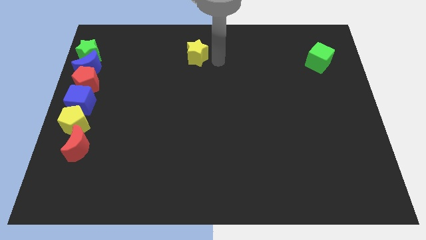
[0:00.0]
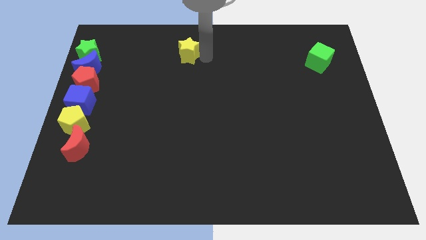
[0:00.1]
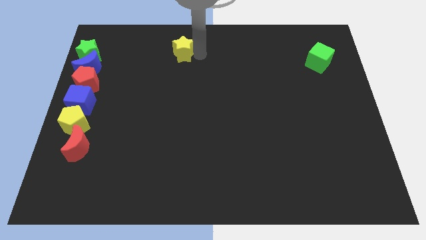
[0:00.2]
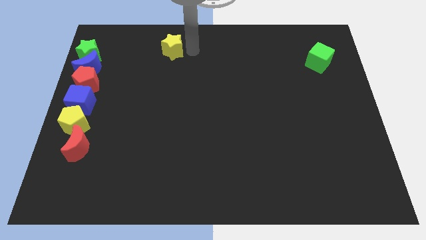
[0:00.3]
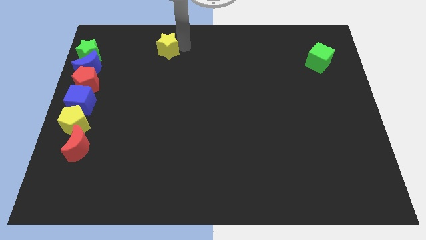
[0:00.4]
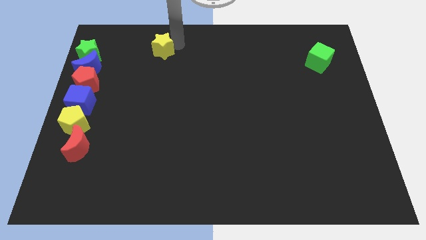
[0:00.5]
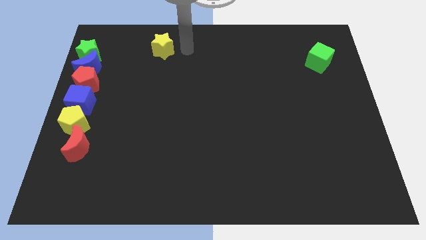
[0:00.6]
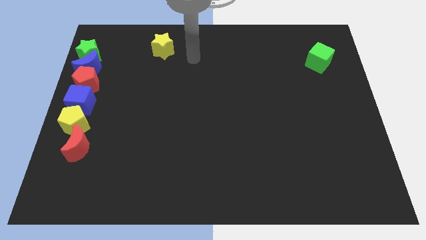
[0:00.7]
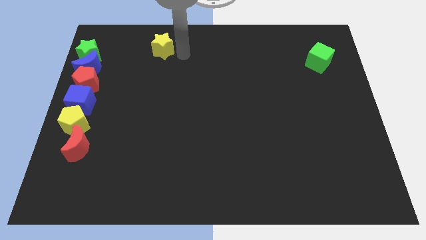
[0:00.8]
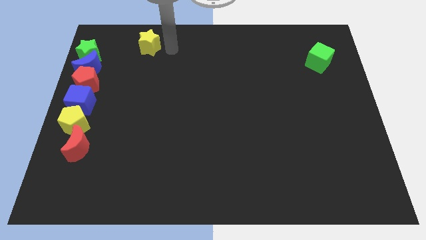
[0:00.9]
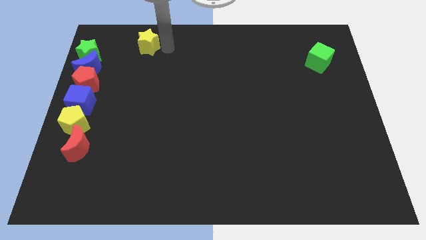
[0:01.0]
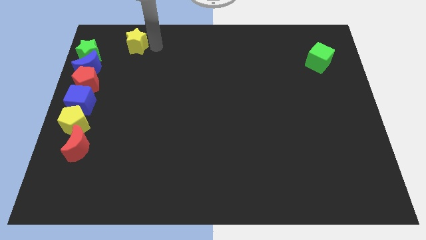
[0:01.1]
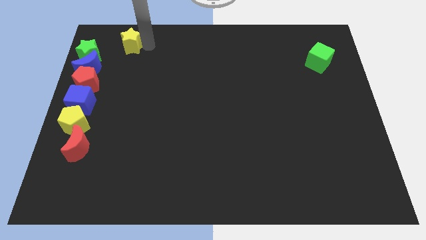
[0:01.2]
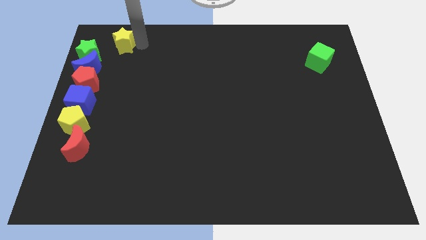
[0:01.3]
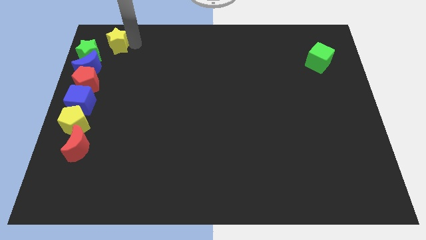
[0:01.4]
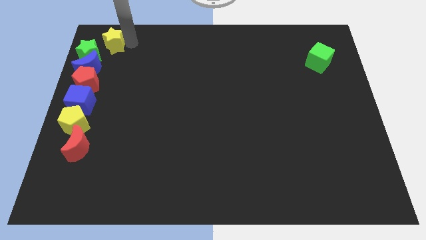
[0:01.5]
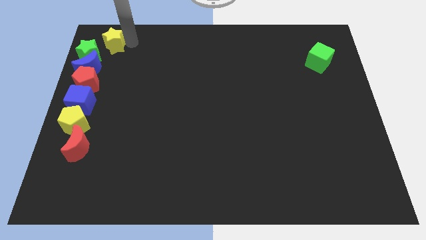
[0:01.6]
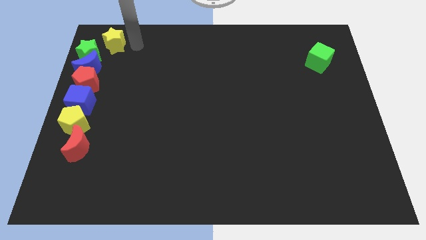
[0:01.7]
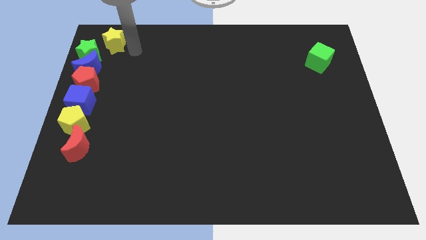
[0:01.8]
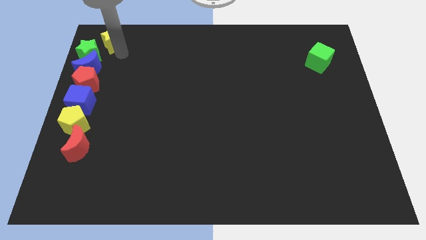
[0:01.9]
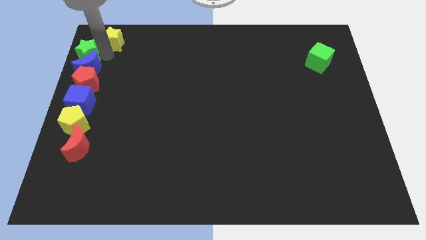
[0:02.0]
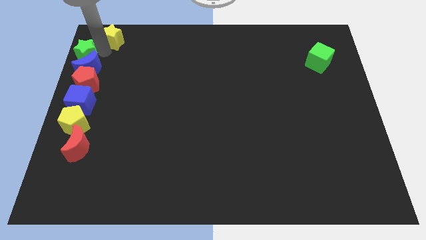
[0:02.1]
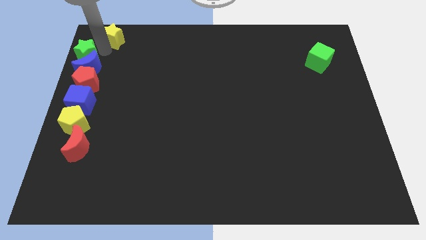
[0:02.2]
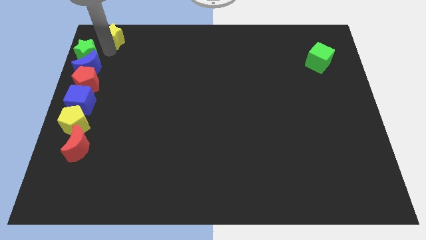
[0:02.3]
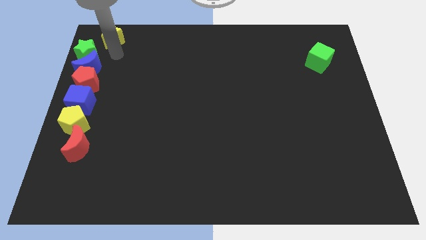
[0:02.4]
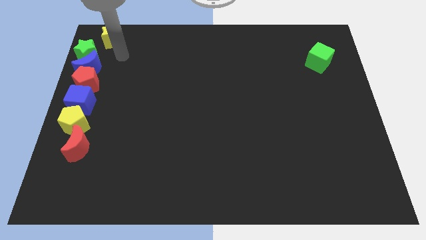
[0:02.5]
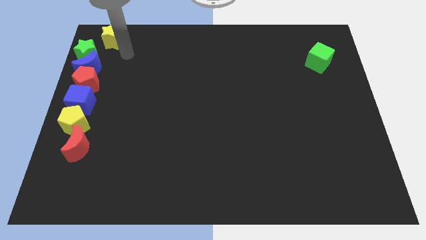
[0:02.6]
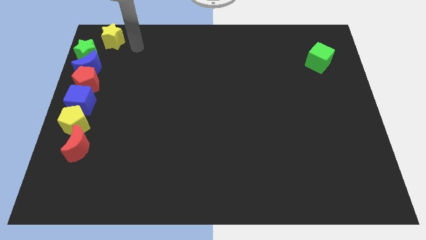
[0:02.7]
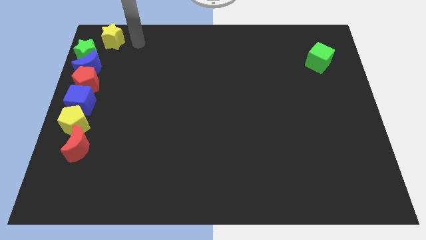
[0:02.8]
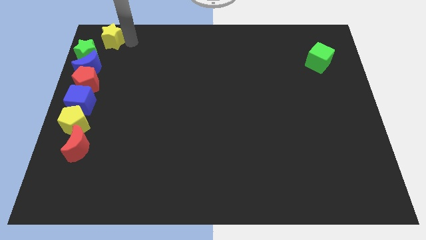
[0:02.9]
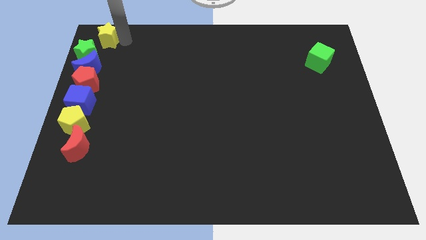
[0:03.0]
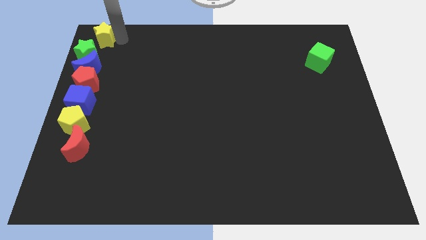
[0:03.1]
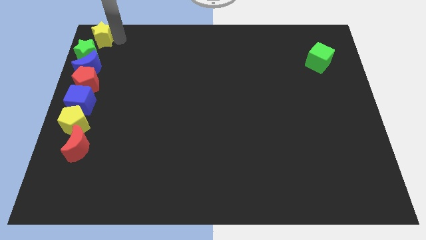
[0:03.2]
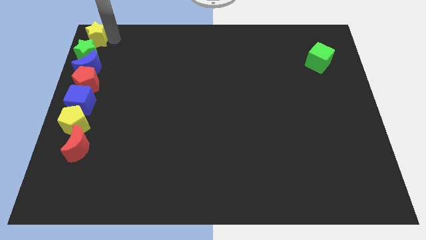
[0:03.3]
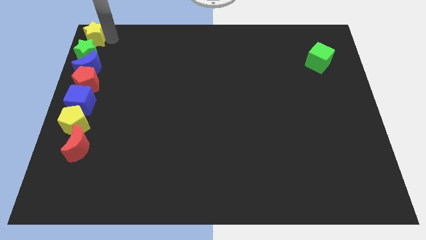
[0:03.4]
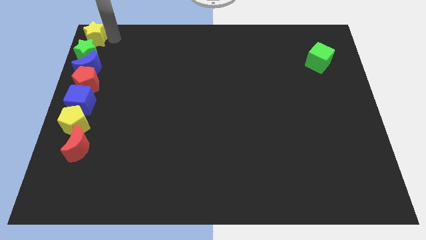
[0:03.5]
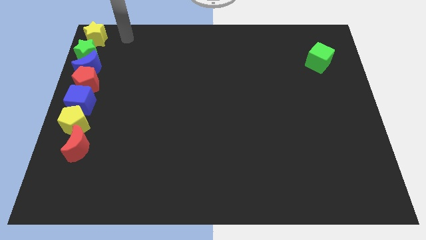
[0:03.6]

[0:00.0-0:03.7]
push the yellow star to the top of the green star vertically

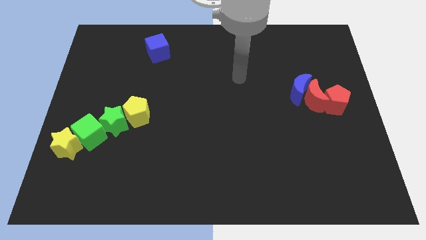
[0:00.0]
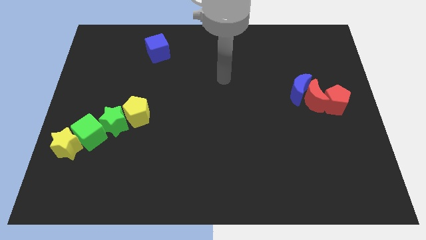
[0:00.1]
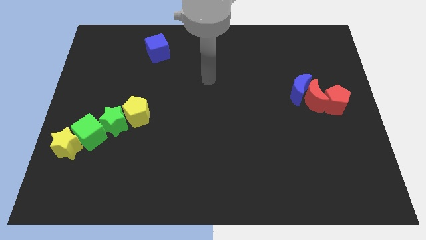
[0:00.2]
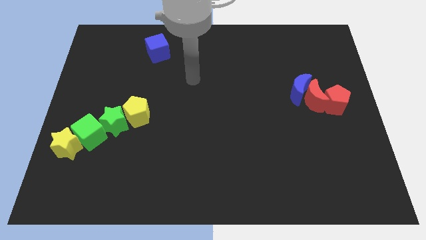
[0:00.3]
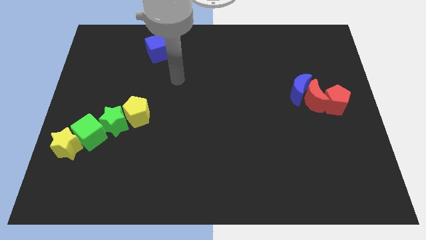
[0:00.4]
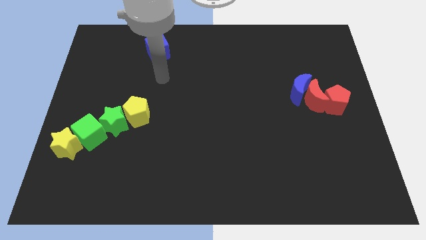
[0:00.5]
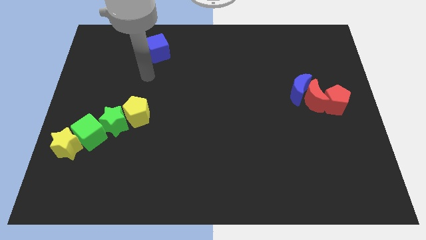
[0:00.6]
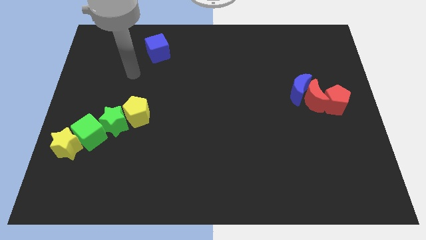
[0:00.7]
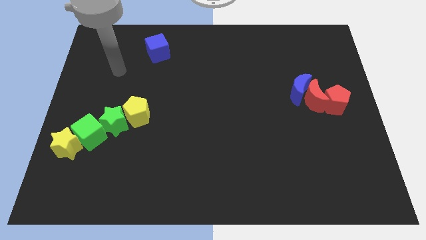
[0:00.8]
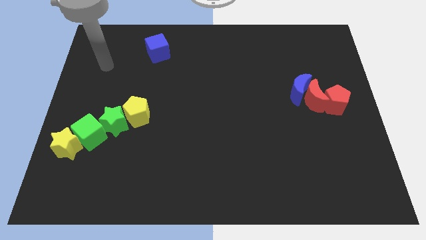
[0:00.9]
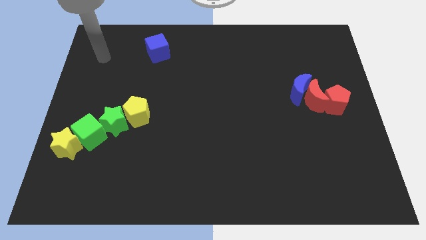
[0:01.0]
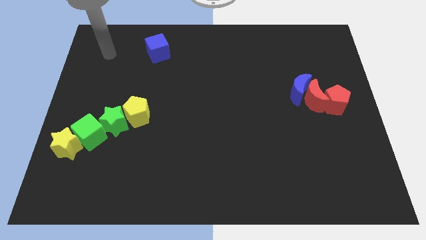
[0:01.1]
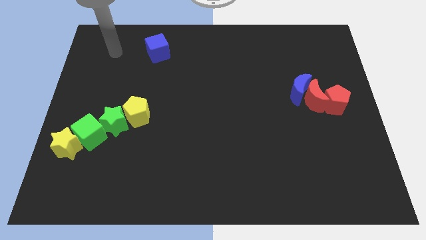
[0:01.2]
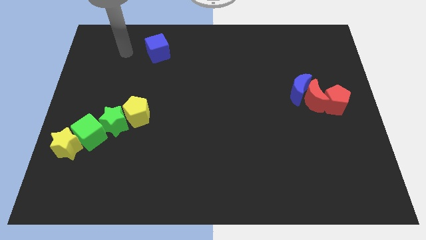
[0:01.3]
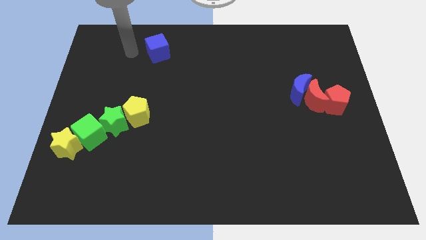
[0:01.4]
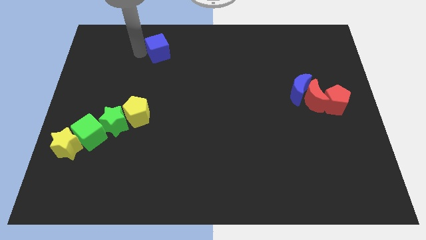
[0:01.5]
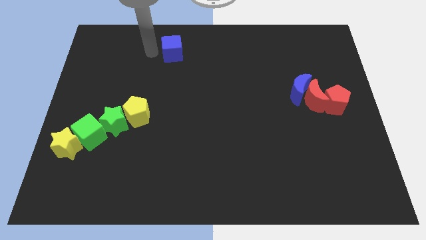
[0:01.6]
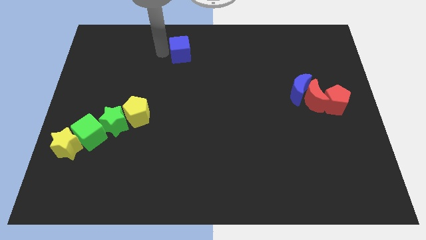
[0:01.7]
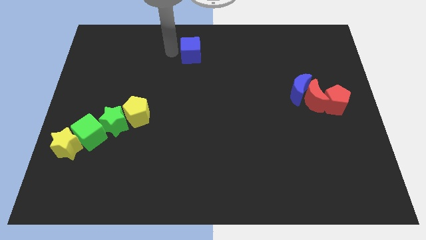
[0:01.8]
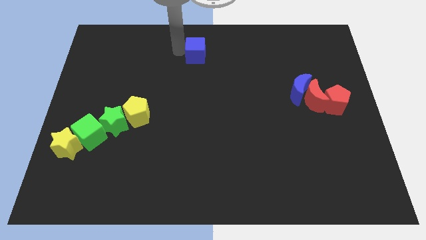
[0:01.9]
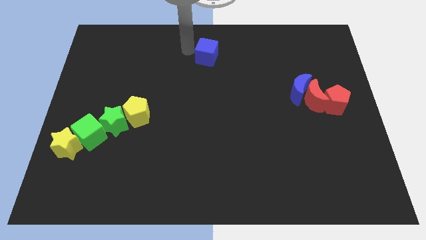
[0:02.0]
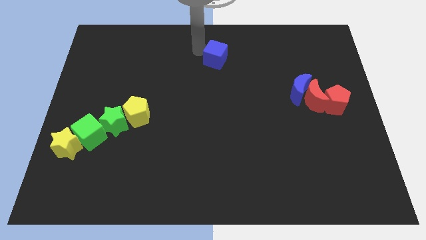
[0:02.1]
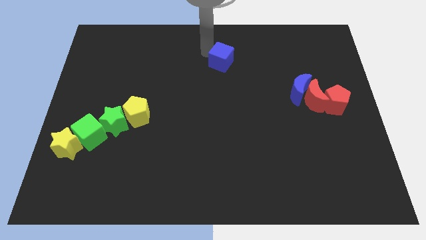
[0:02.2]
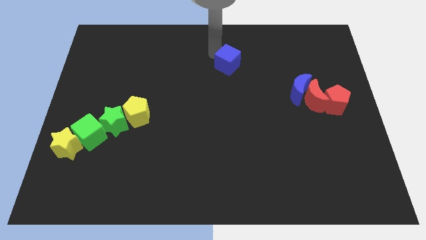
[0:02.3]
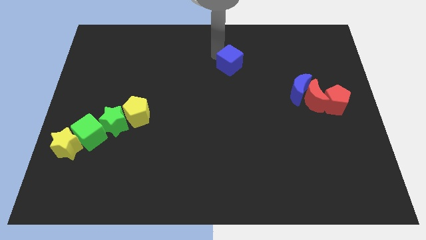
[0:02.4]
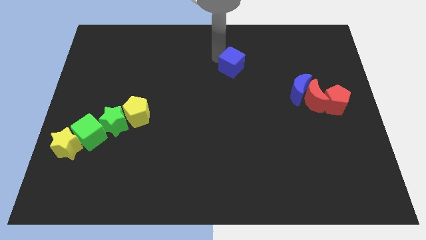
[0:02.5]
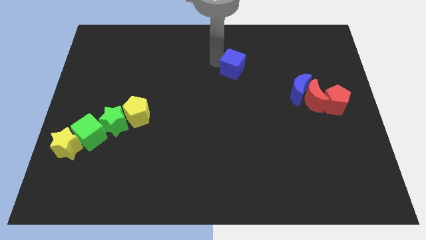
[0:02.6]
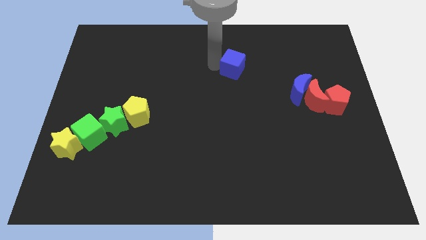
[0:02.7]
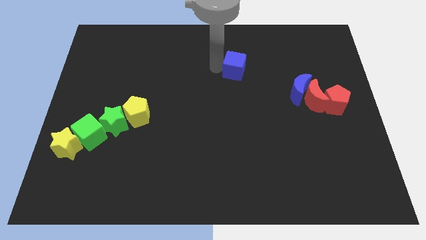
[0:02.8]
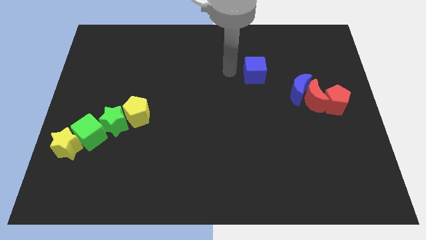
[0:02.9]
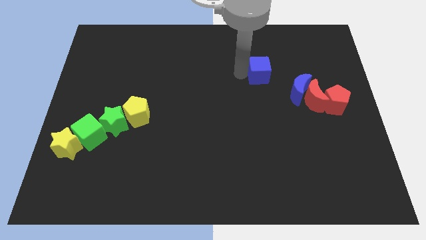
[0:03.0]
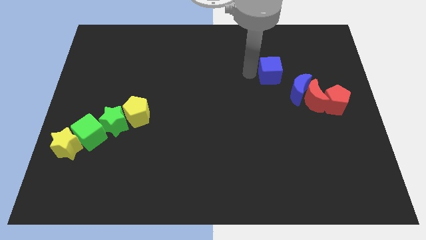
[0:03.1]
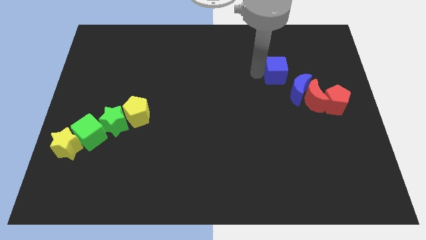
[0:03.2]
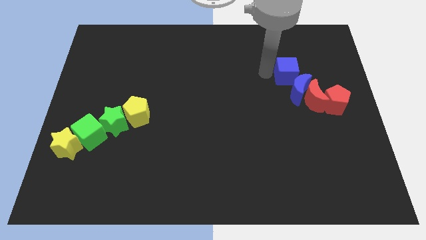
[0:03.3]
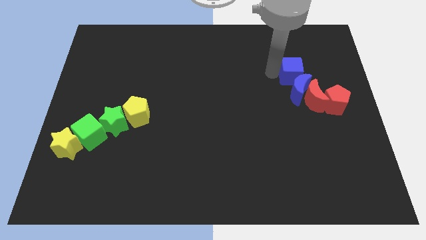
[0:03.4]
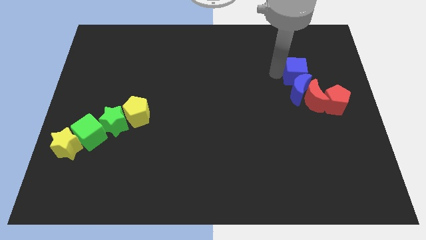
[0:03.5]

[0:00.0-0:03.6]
push the blue cube to the top of the blue crescent

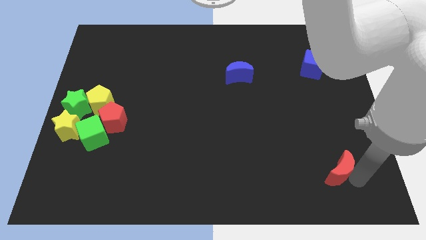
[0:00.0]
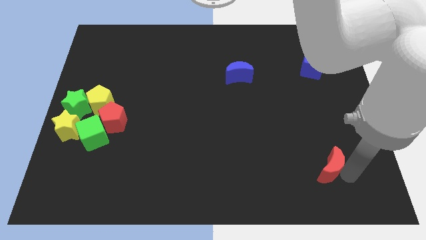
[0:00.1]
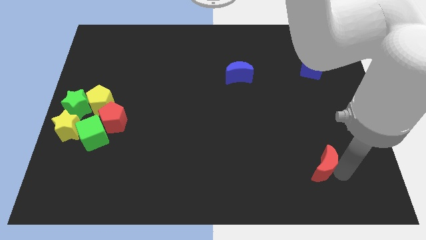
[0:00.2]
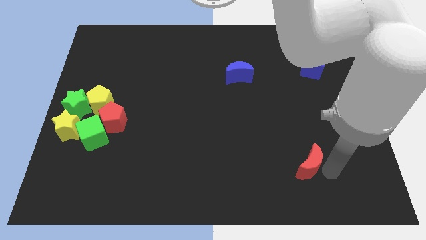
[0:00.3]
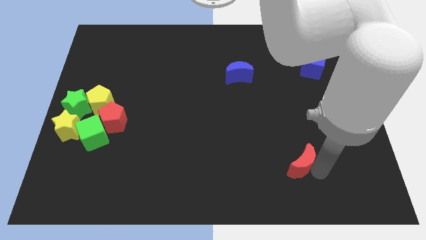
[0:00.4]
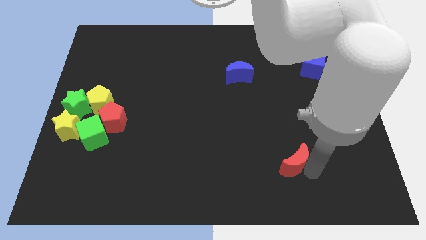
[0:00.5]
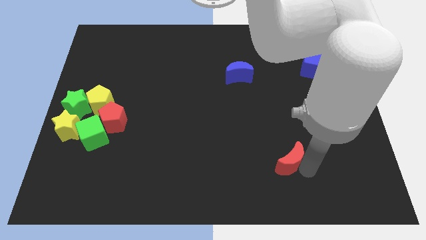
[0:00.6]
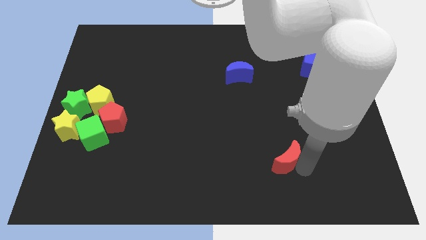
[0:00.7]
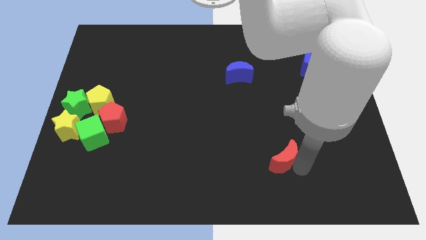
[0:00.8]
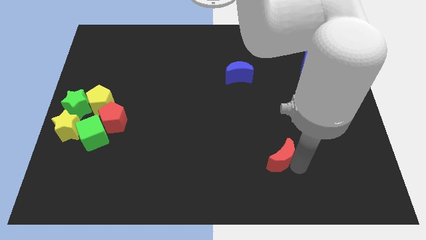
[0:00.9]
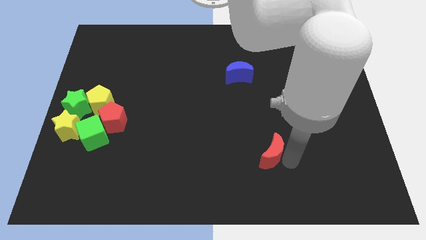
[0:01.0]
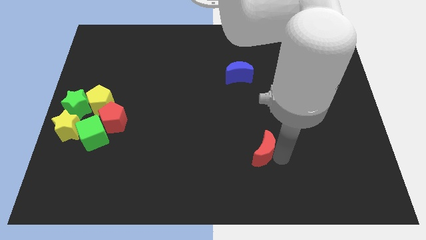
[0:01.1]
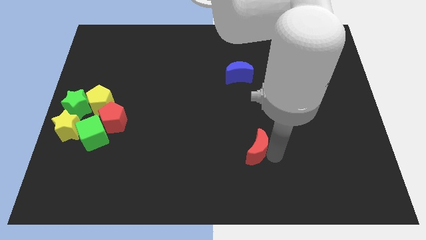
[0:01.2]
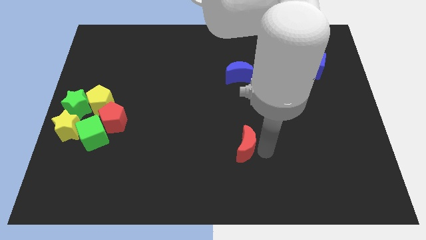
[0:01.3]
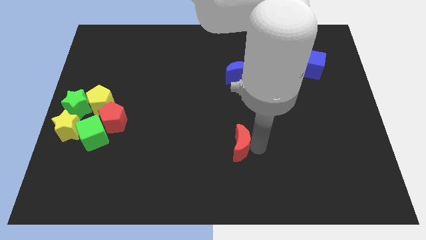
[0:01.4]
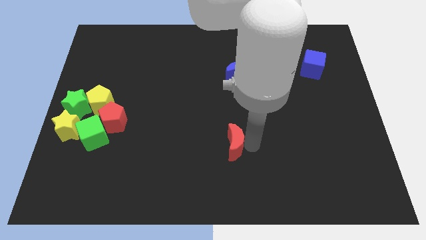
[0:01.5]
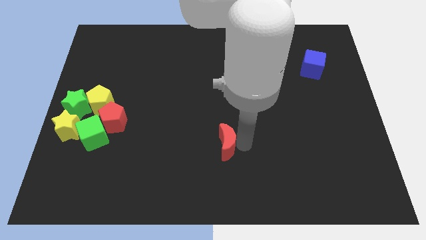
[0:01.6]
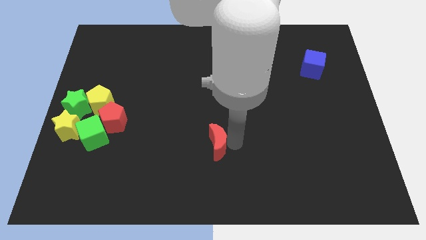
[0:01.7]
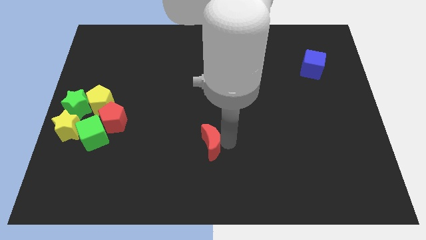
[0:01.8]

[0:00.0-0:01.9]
place red moon to the center of the board
